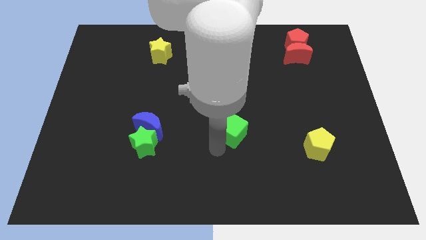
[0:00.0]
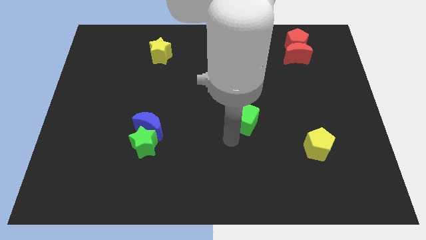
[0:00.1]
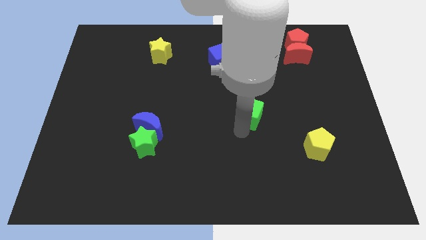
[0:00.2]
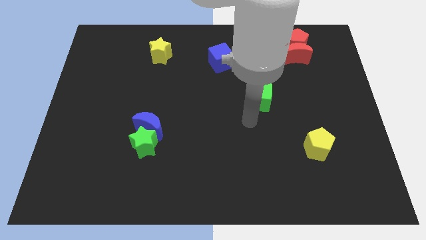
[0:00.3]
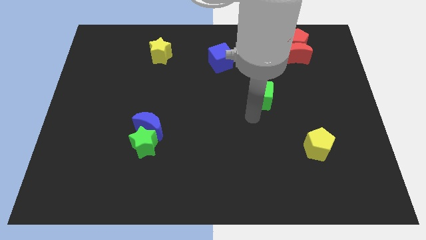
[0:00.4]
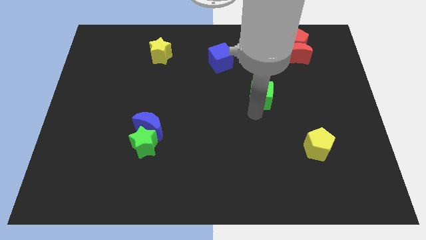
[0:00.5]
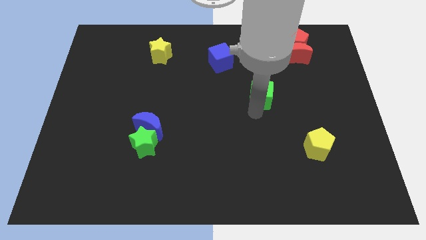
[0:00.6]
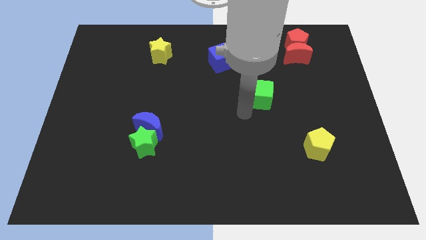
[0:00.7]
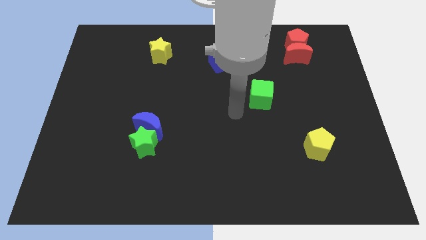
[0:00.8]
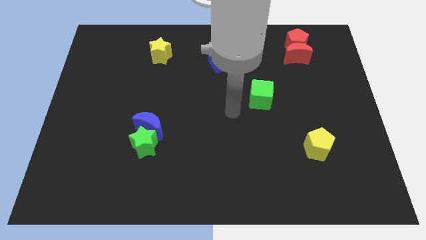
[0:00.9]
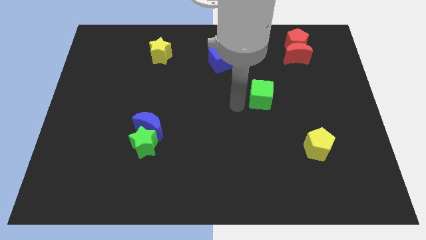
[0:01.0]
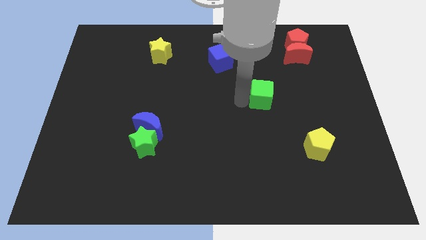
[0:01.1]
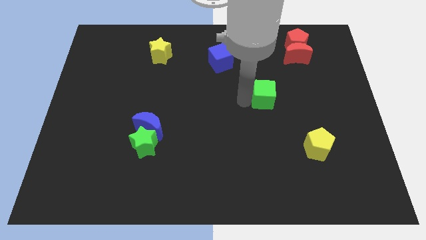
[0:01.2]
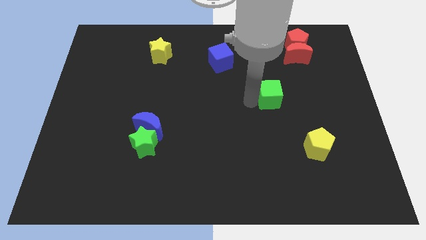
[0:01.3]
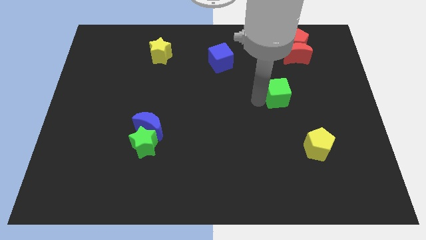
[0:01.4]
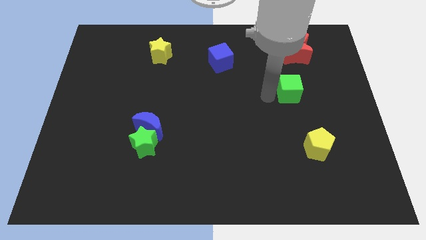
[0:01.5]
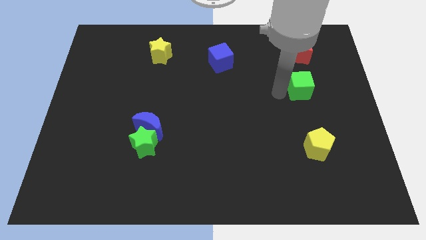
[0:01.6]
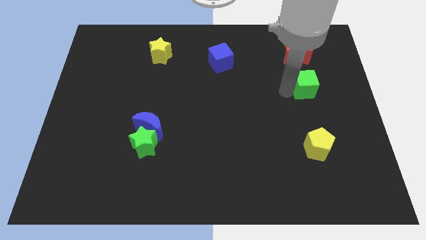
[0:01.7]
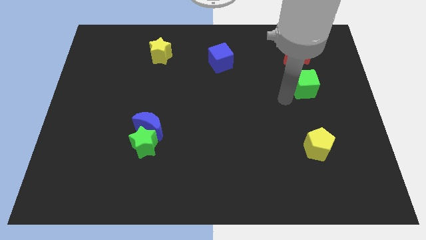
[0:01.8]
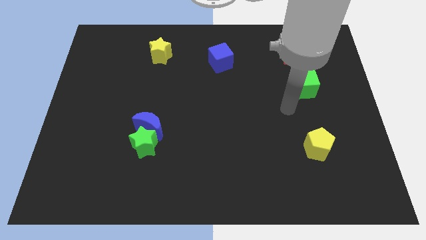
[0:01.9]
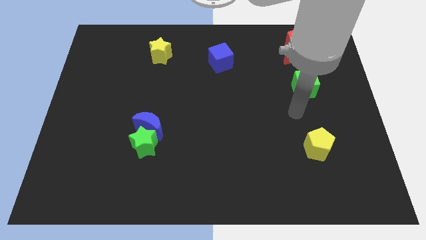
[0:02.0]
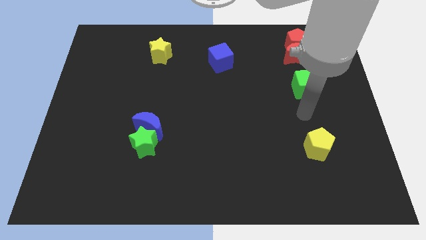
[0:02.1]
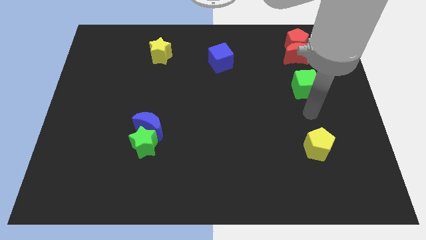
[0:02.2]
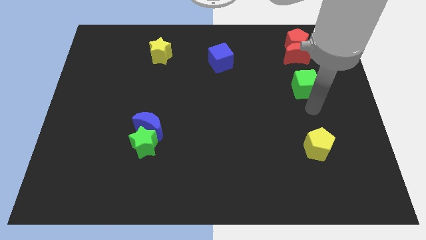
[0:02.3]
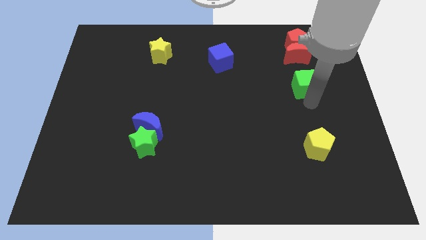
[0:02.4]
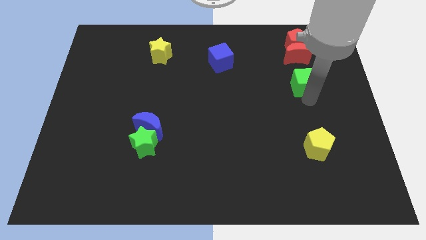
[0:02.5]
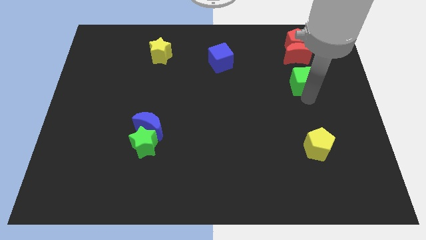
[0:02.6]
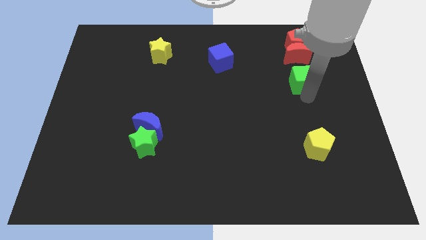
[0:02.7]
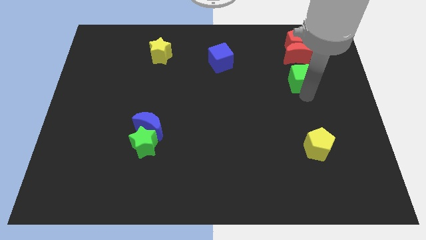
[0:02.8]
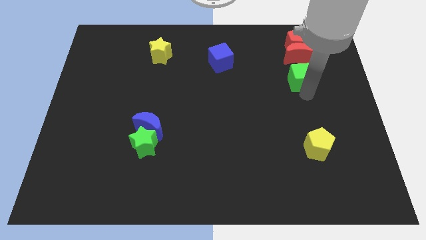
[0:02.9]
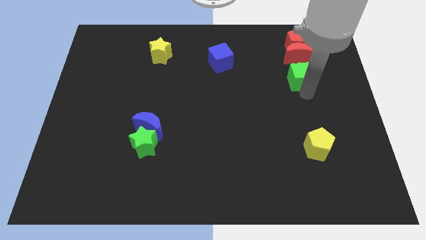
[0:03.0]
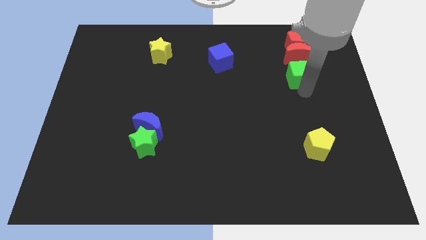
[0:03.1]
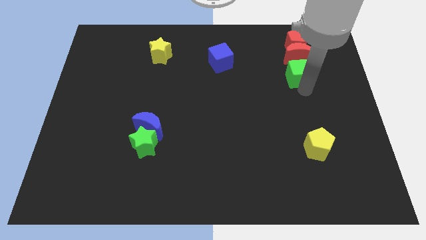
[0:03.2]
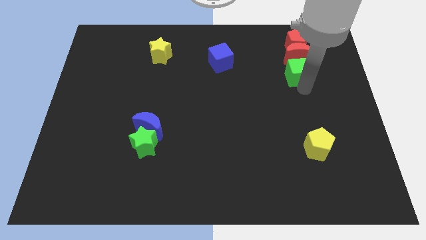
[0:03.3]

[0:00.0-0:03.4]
bring the green cube close to the bottom side of the red crescent

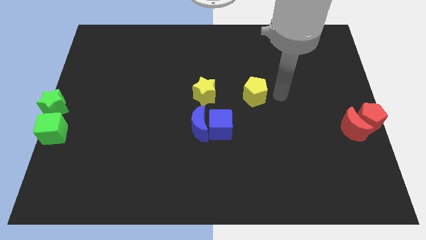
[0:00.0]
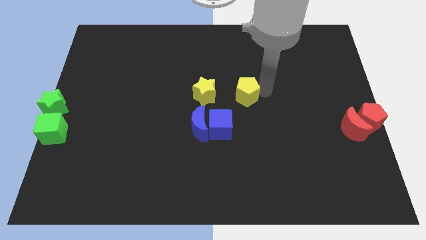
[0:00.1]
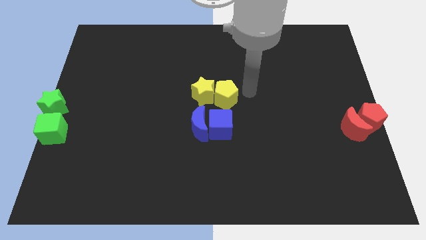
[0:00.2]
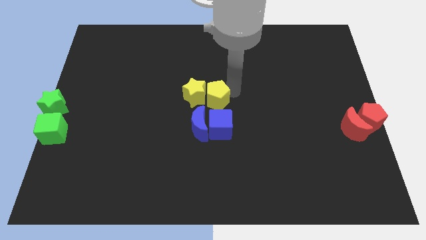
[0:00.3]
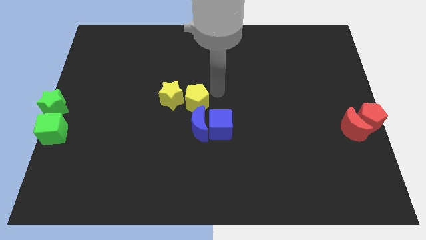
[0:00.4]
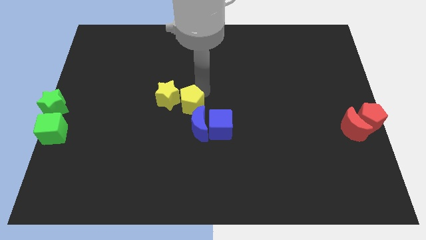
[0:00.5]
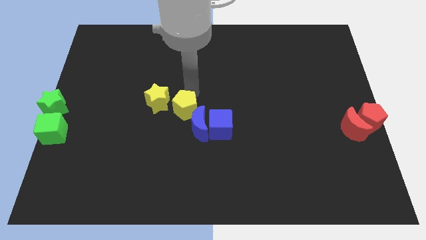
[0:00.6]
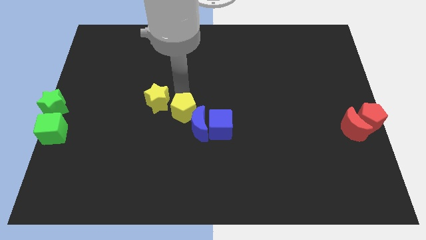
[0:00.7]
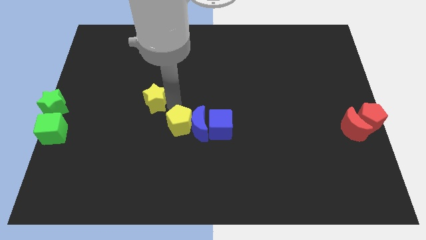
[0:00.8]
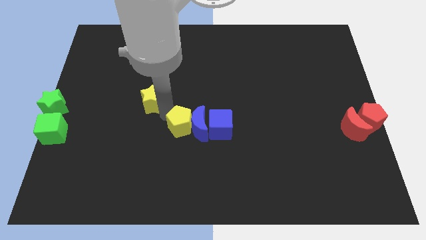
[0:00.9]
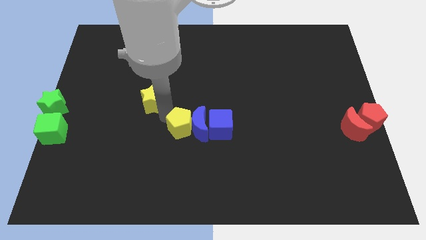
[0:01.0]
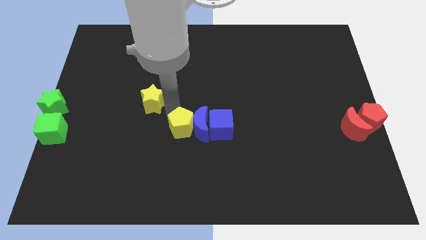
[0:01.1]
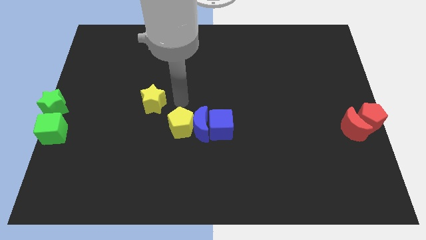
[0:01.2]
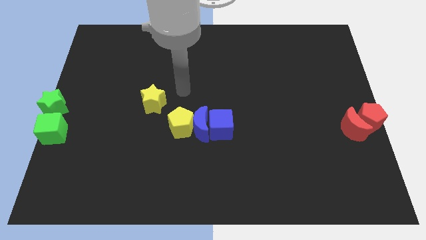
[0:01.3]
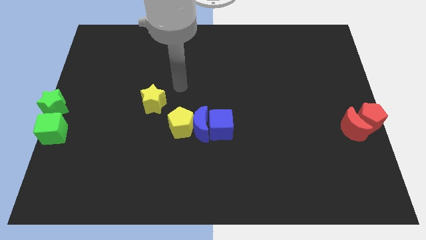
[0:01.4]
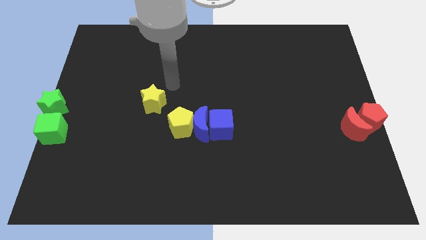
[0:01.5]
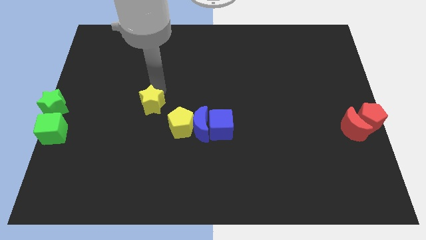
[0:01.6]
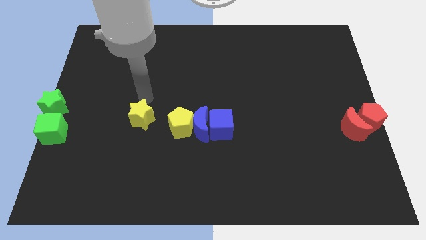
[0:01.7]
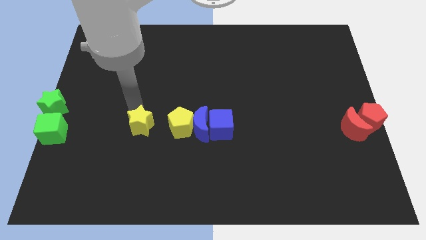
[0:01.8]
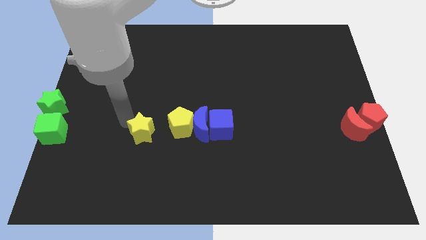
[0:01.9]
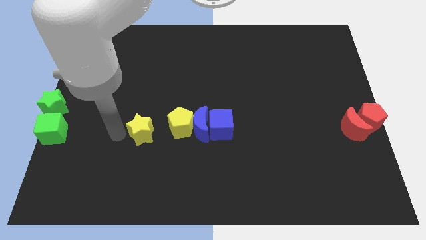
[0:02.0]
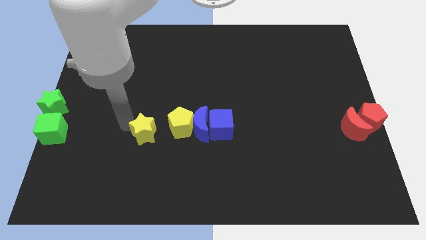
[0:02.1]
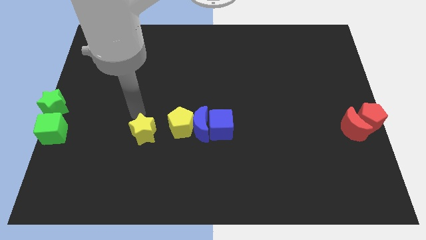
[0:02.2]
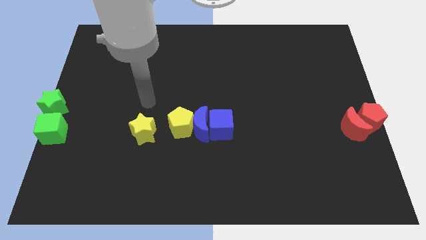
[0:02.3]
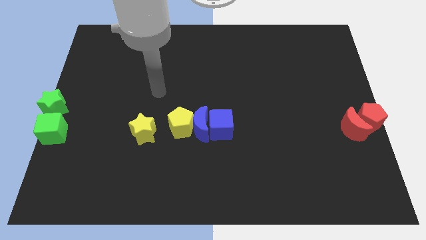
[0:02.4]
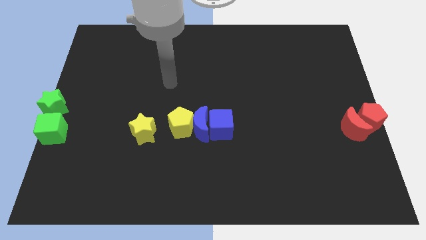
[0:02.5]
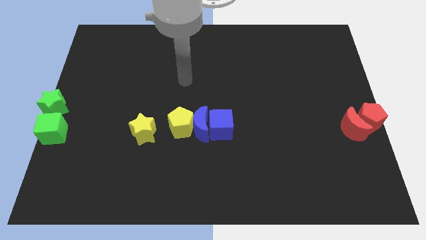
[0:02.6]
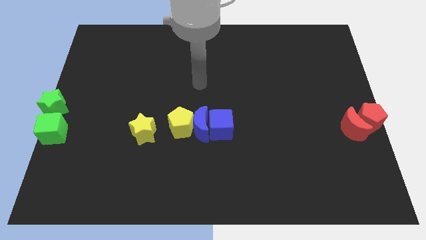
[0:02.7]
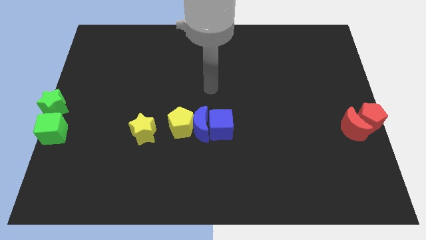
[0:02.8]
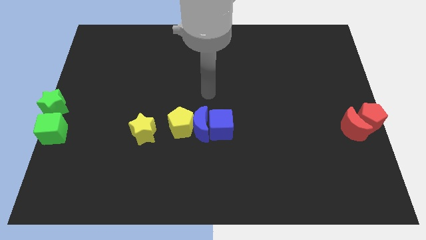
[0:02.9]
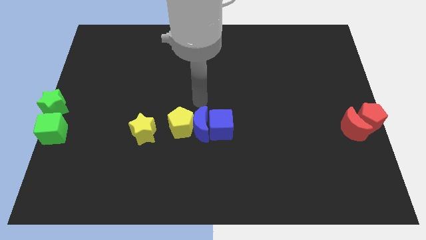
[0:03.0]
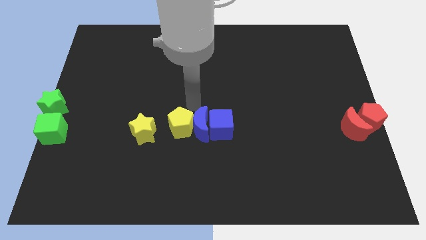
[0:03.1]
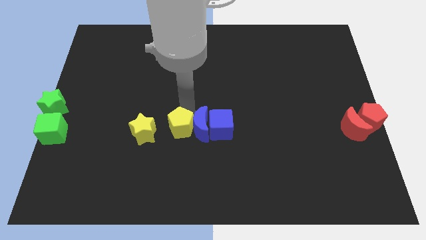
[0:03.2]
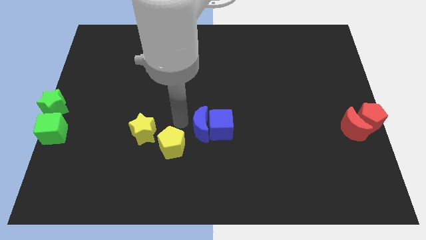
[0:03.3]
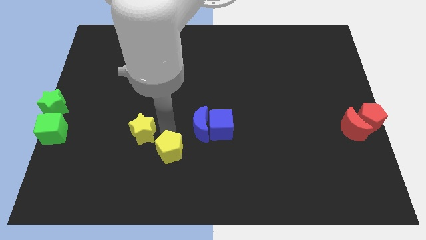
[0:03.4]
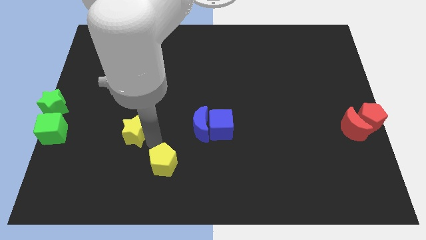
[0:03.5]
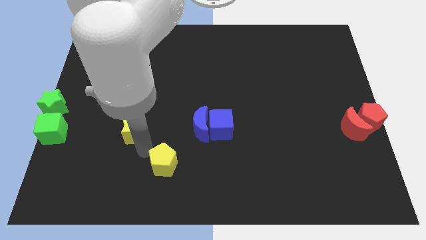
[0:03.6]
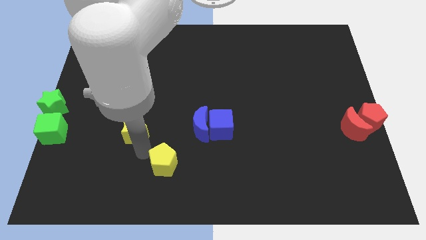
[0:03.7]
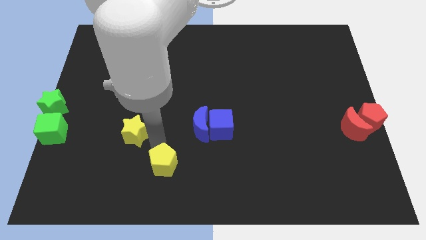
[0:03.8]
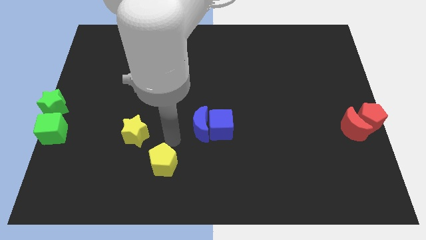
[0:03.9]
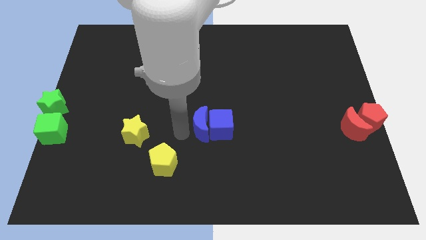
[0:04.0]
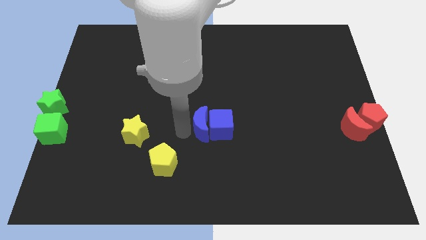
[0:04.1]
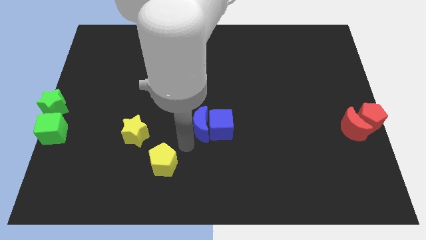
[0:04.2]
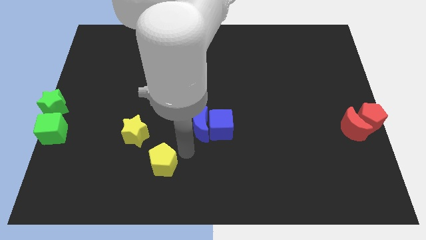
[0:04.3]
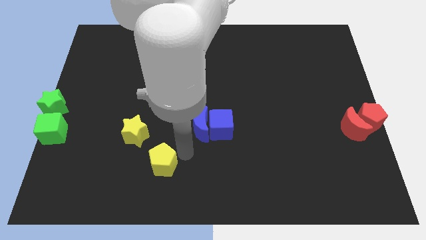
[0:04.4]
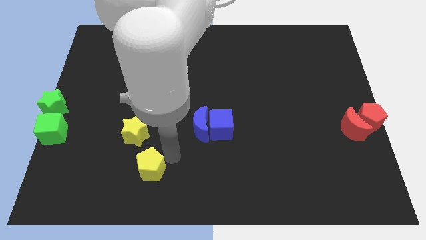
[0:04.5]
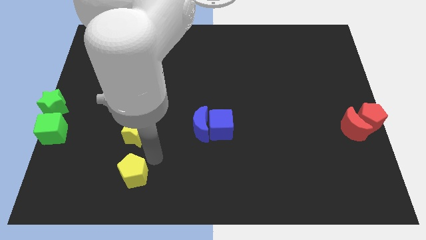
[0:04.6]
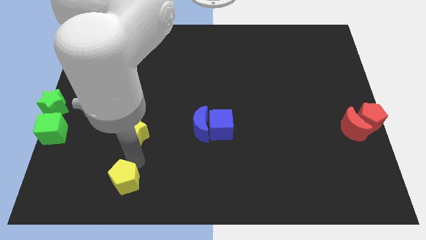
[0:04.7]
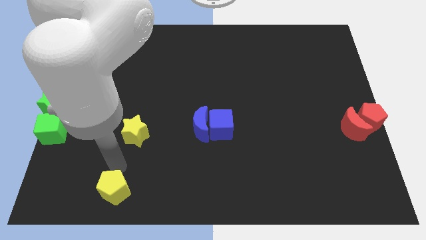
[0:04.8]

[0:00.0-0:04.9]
push the yellow pentagon to the bottom of the yellow star

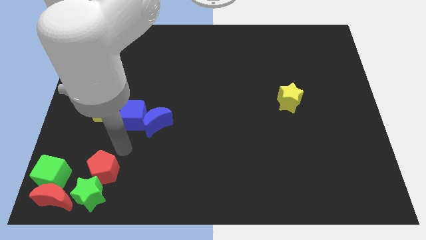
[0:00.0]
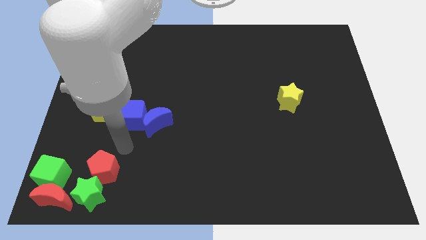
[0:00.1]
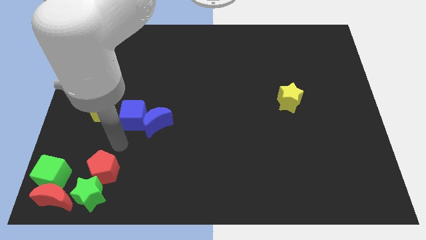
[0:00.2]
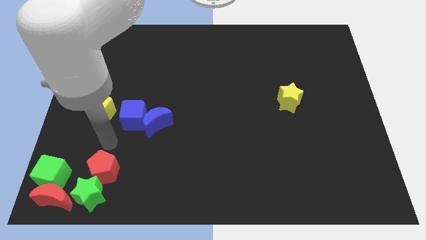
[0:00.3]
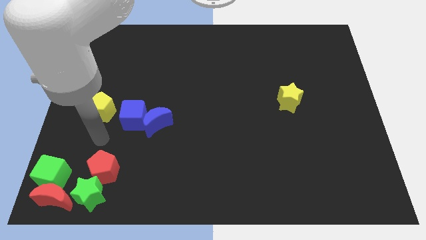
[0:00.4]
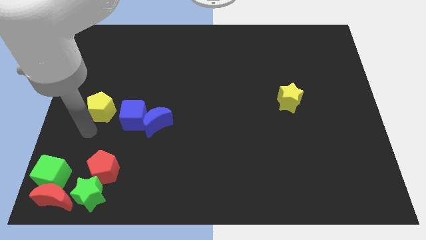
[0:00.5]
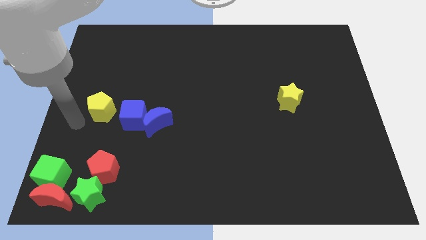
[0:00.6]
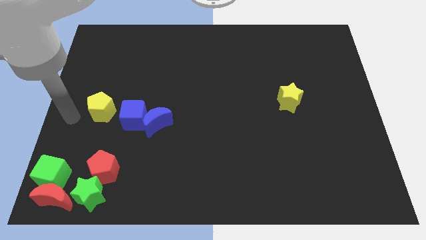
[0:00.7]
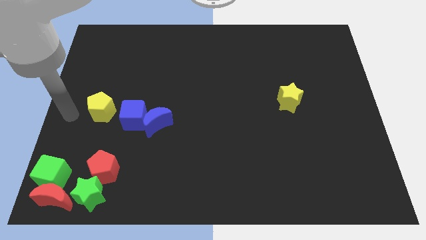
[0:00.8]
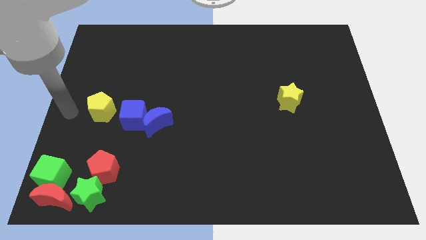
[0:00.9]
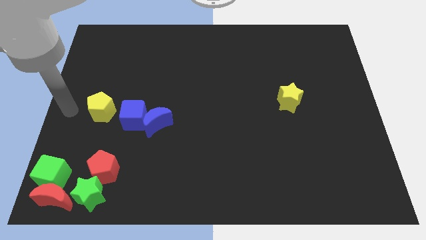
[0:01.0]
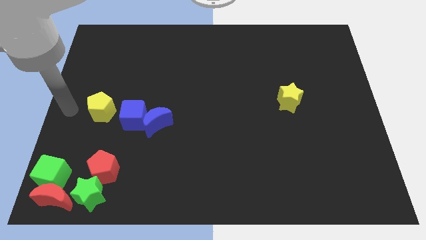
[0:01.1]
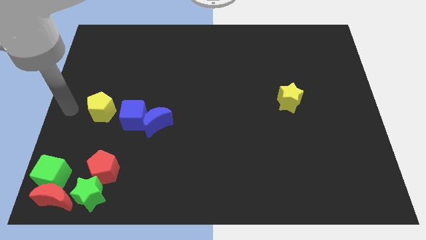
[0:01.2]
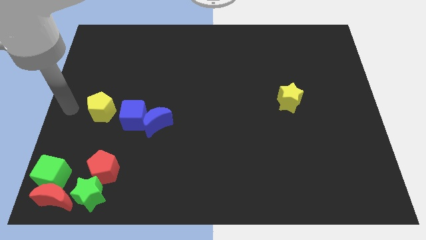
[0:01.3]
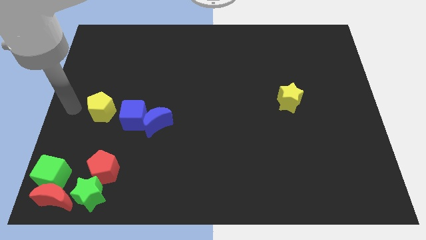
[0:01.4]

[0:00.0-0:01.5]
place your hand at the left of the yellow pentagon
